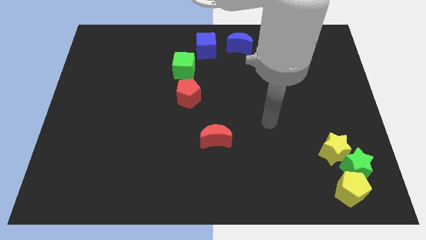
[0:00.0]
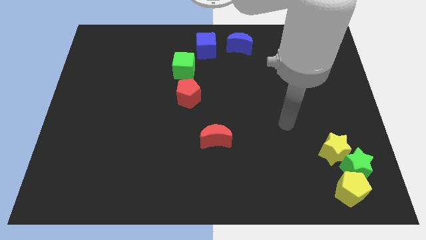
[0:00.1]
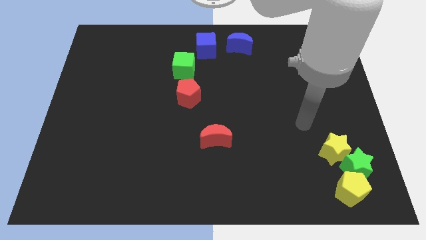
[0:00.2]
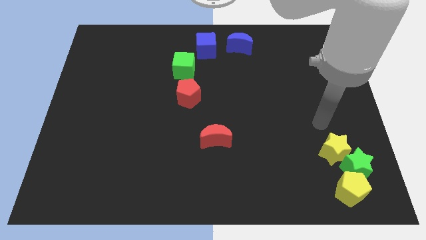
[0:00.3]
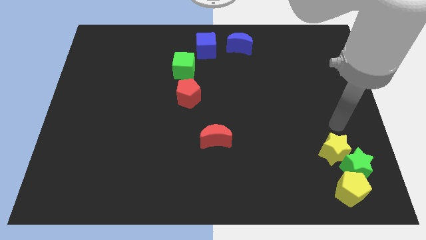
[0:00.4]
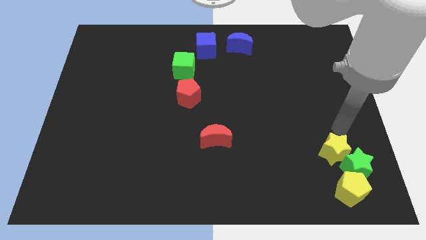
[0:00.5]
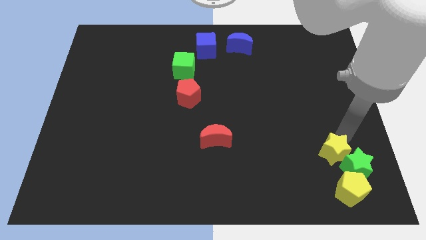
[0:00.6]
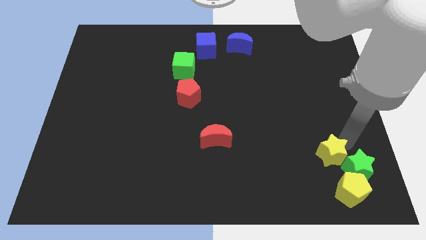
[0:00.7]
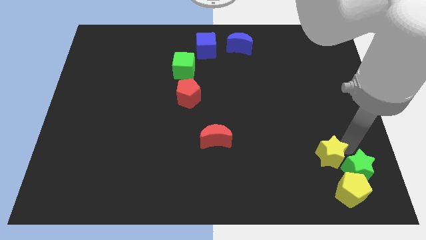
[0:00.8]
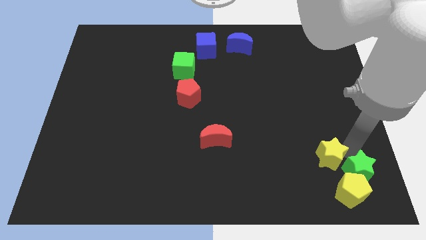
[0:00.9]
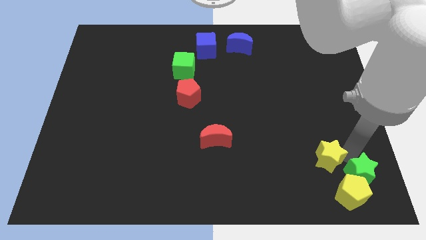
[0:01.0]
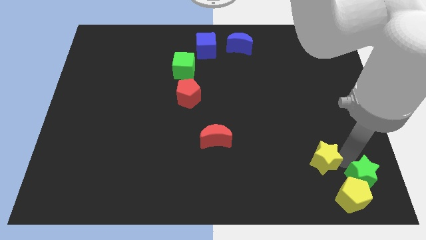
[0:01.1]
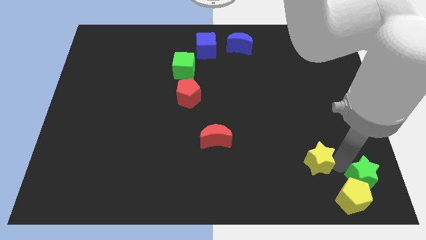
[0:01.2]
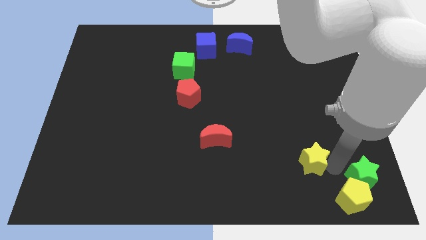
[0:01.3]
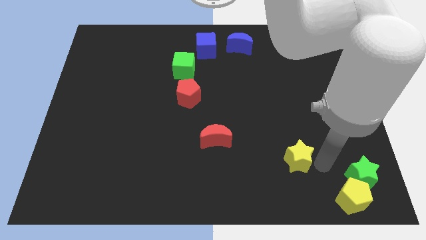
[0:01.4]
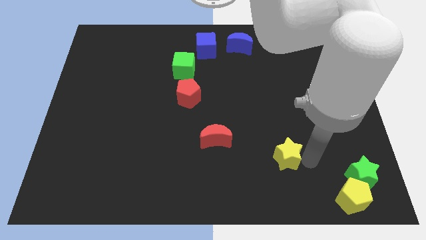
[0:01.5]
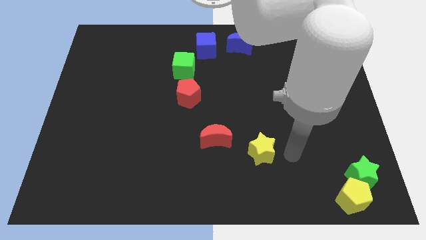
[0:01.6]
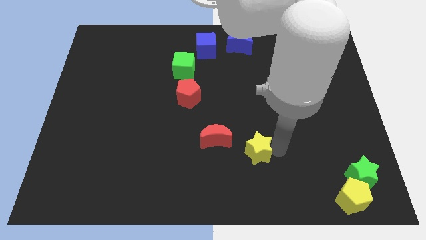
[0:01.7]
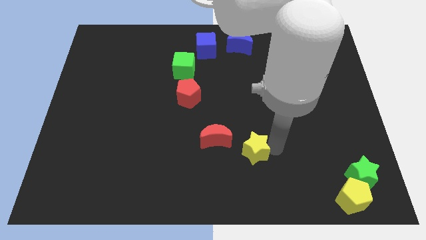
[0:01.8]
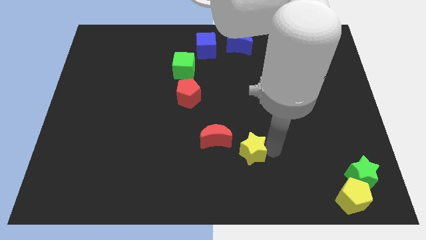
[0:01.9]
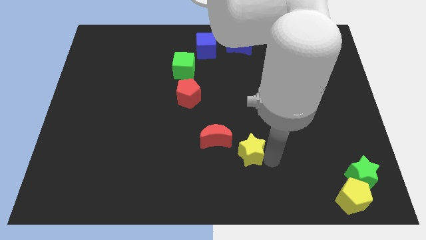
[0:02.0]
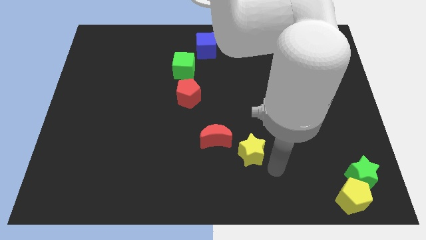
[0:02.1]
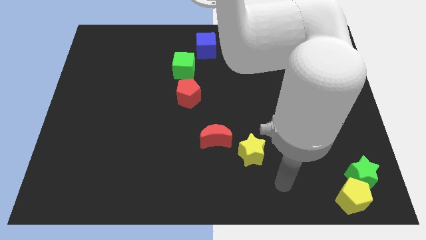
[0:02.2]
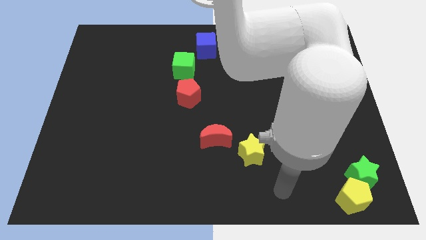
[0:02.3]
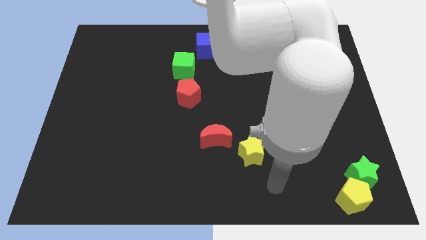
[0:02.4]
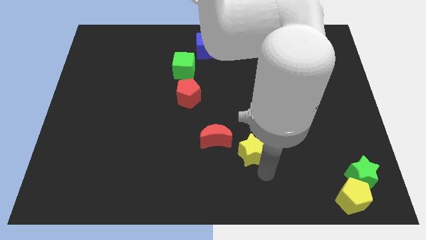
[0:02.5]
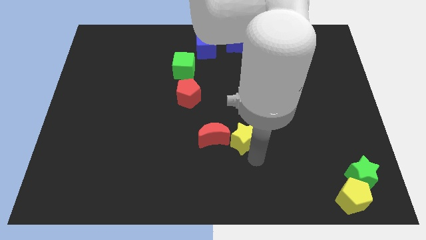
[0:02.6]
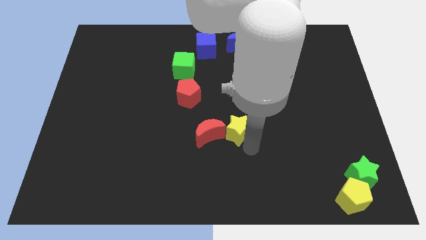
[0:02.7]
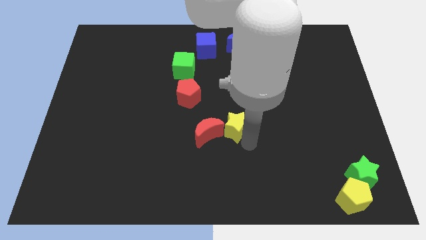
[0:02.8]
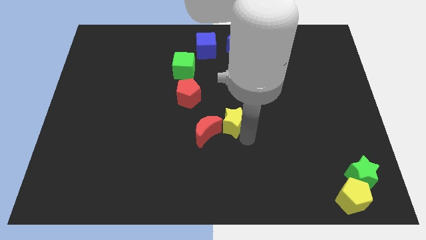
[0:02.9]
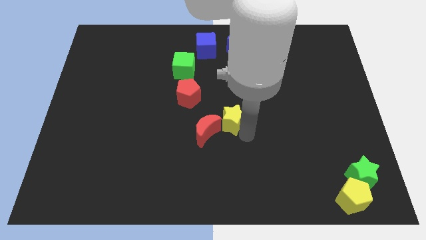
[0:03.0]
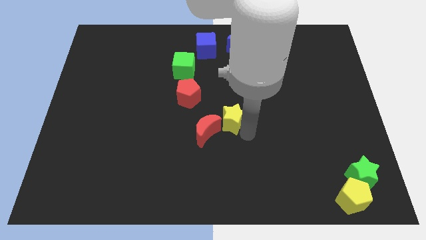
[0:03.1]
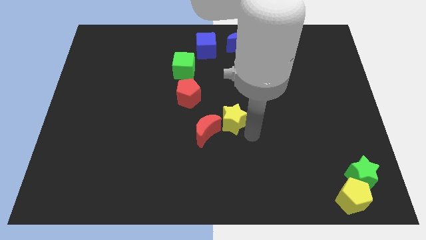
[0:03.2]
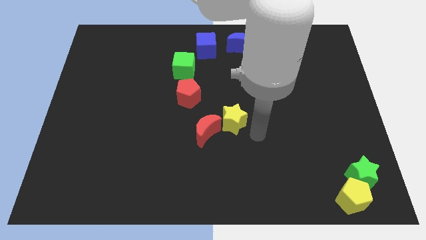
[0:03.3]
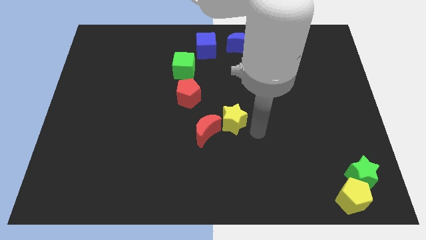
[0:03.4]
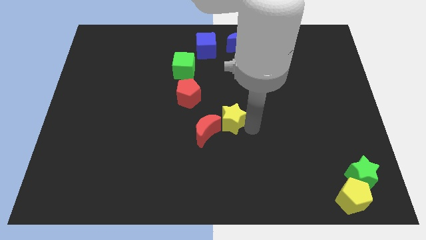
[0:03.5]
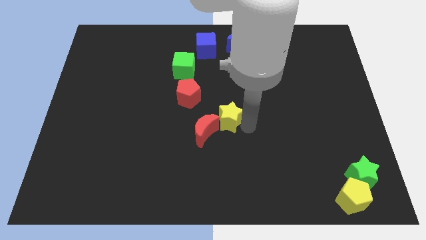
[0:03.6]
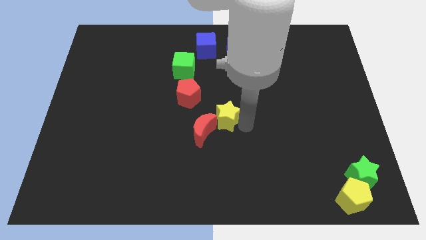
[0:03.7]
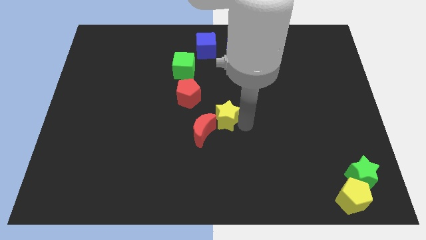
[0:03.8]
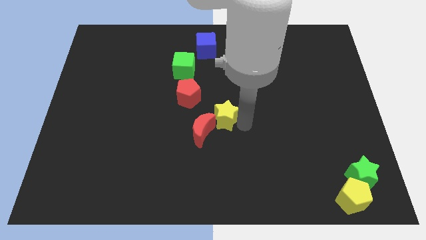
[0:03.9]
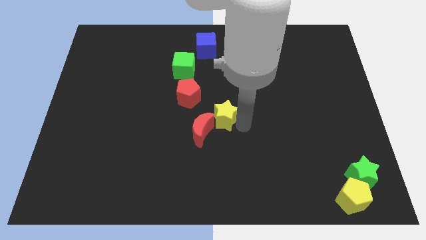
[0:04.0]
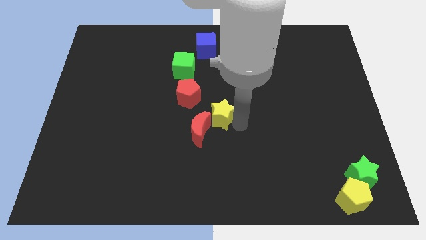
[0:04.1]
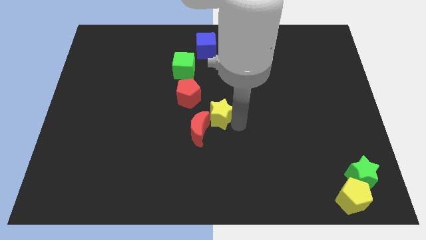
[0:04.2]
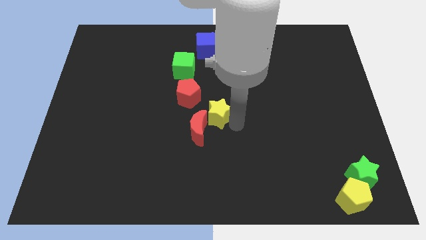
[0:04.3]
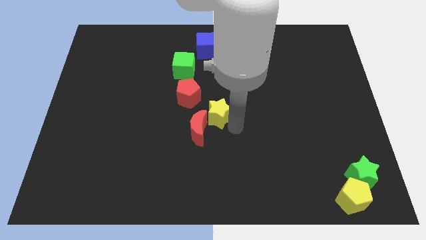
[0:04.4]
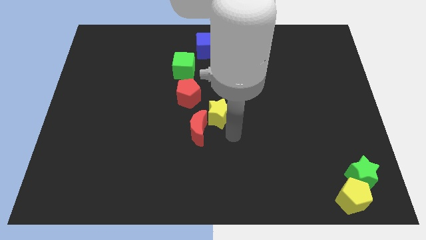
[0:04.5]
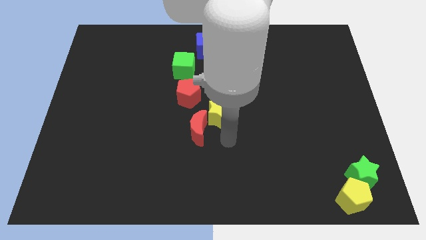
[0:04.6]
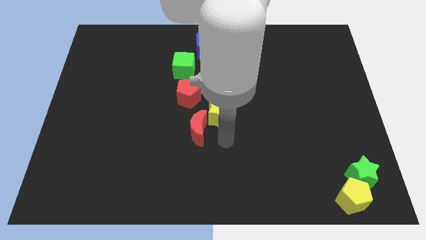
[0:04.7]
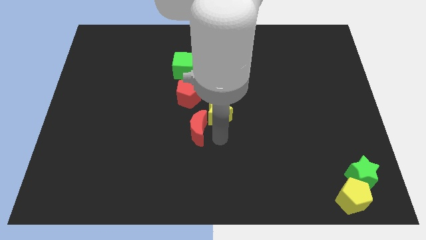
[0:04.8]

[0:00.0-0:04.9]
push the yellow star right to red moon

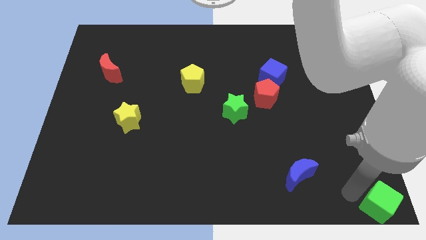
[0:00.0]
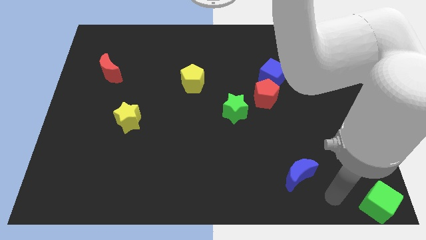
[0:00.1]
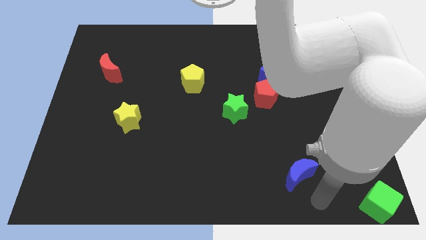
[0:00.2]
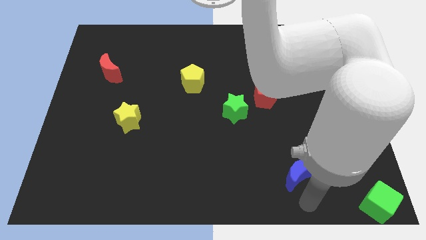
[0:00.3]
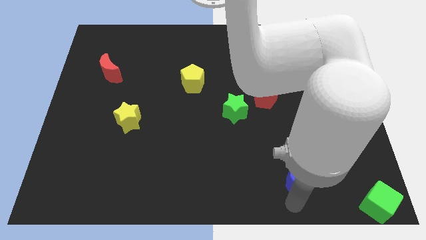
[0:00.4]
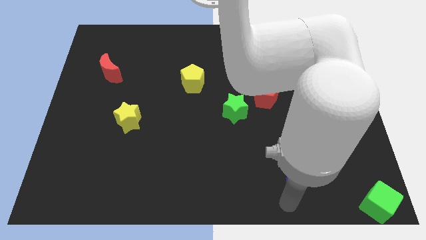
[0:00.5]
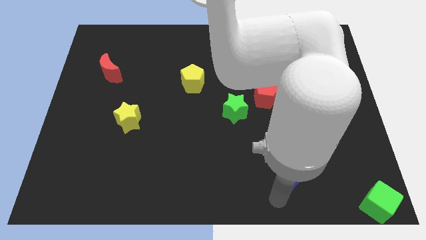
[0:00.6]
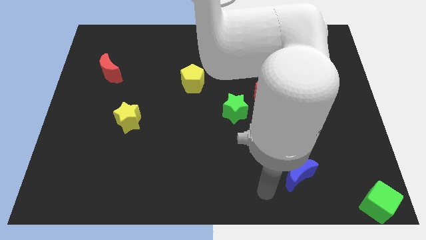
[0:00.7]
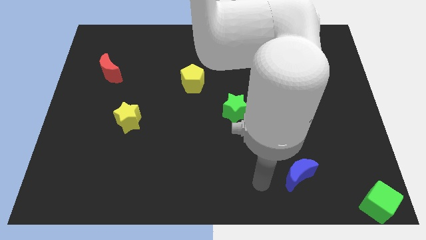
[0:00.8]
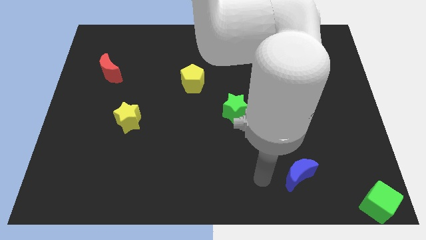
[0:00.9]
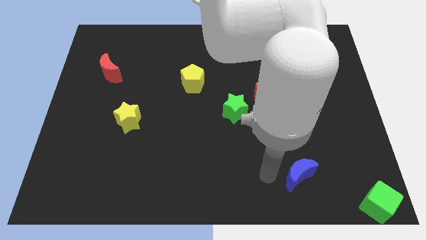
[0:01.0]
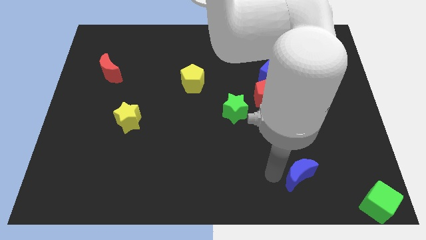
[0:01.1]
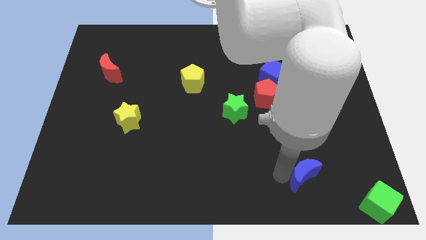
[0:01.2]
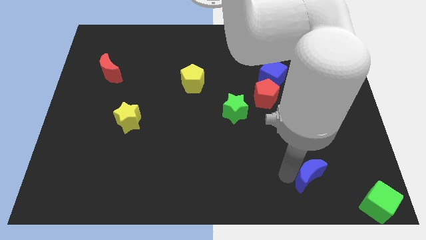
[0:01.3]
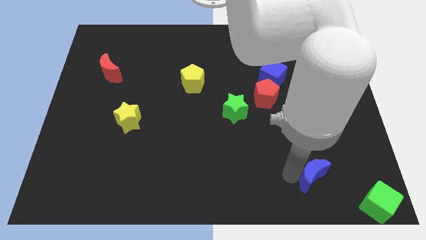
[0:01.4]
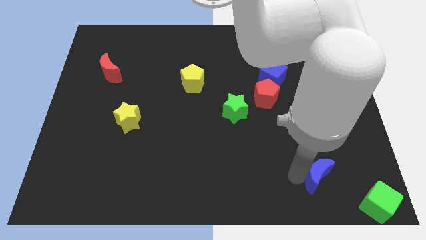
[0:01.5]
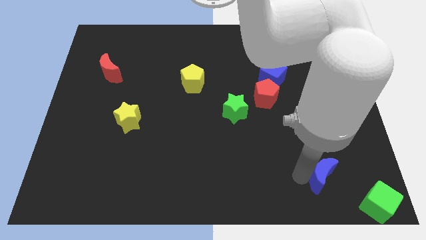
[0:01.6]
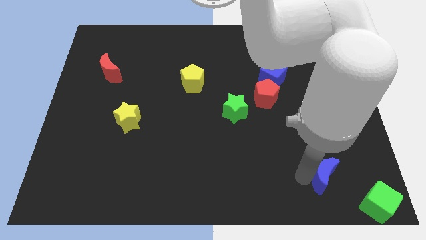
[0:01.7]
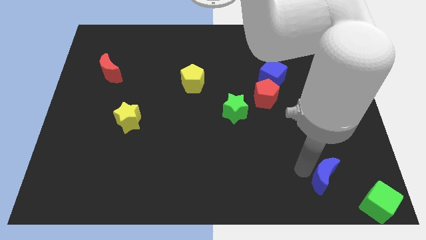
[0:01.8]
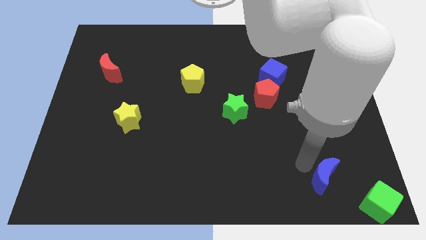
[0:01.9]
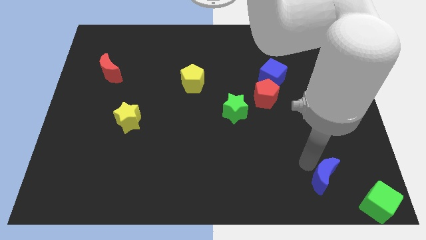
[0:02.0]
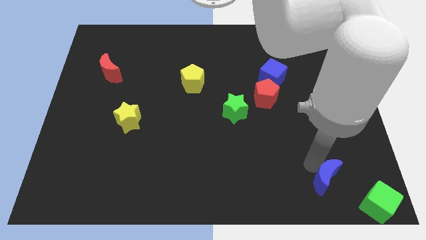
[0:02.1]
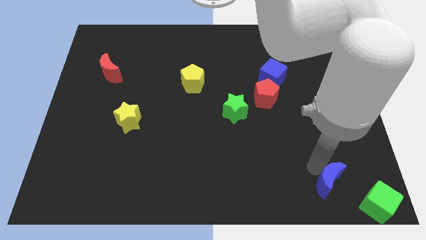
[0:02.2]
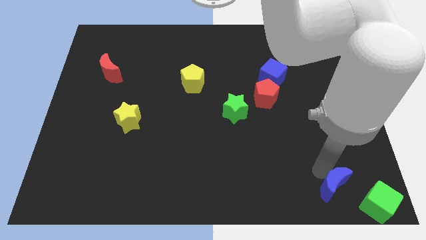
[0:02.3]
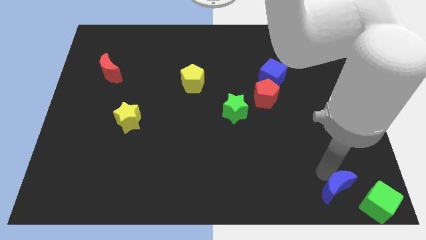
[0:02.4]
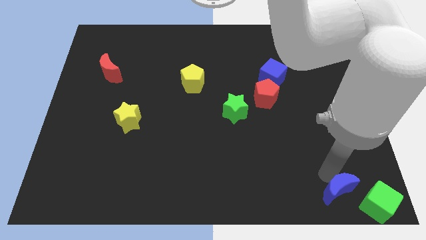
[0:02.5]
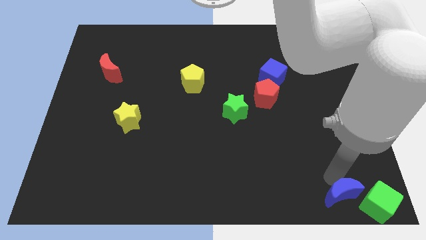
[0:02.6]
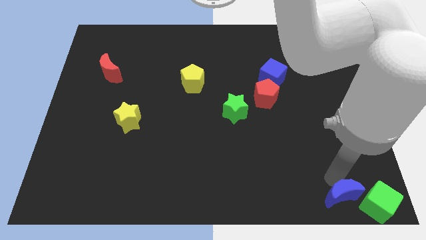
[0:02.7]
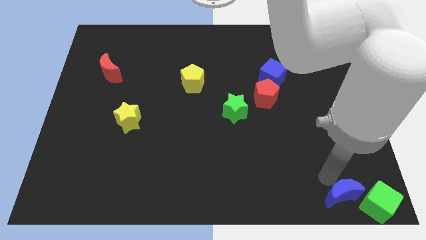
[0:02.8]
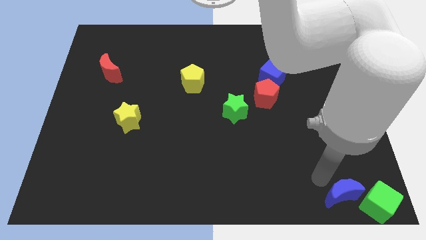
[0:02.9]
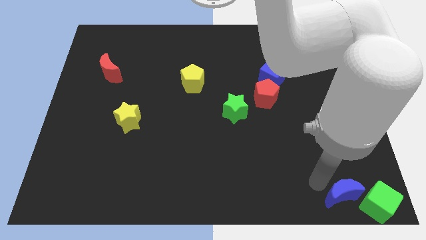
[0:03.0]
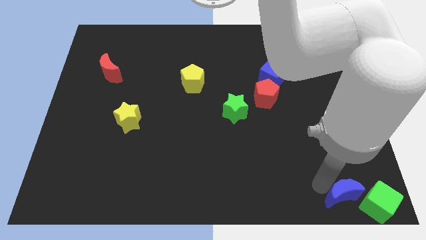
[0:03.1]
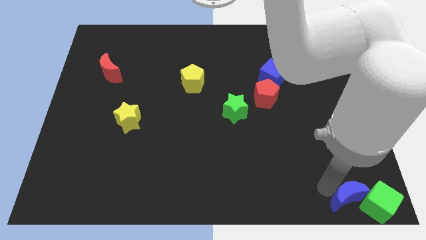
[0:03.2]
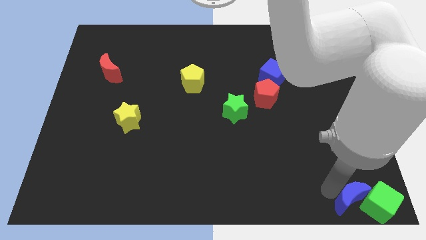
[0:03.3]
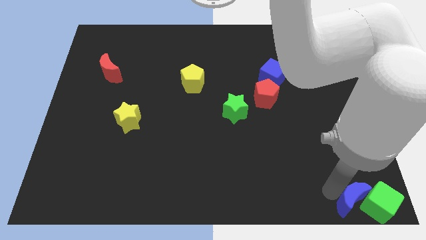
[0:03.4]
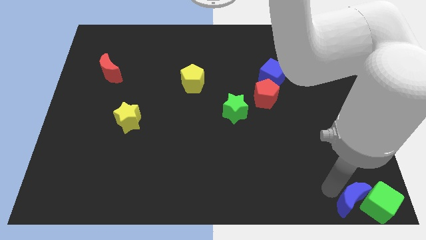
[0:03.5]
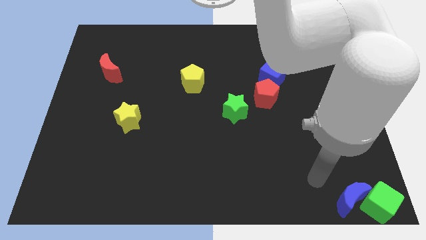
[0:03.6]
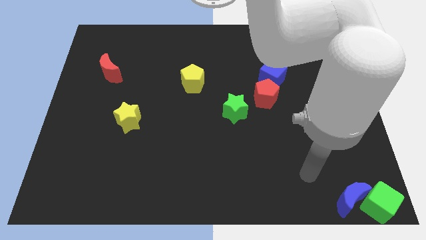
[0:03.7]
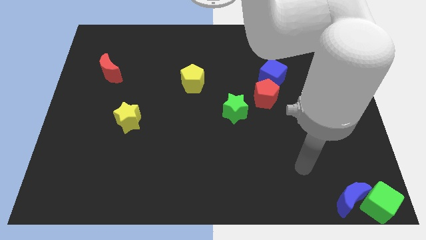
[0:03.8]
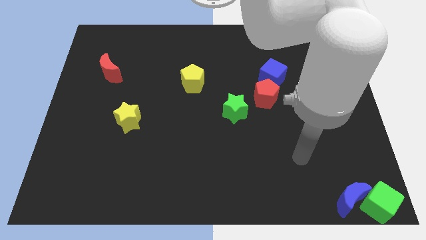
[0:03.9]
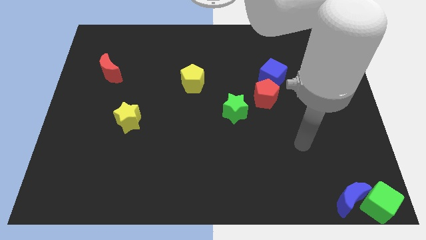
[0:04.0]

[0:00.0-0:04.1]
put the blue crescent to the left side of green cube

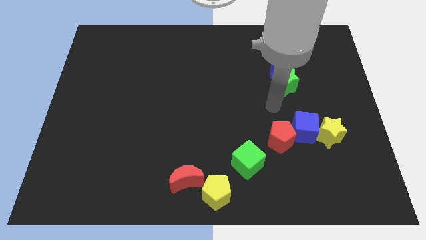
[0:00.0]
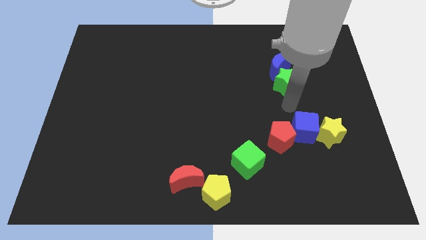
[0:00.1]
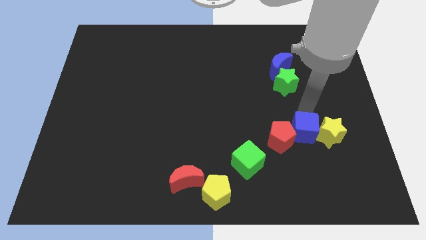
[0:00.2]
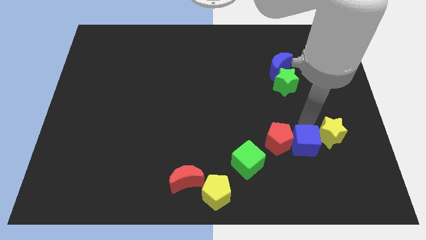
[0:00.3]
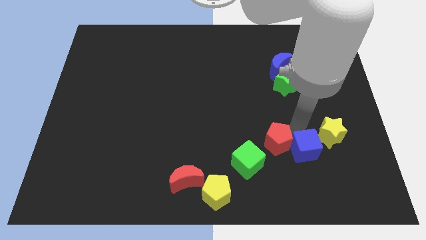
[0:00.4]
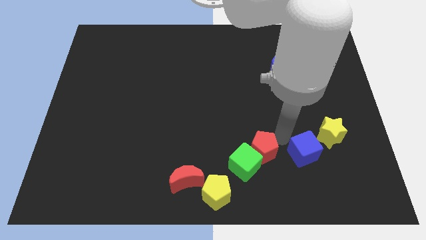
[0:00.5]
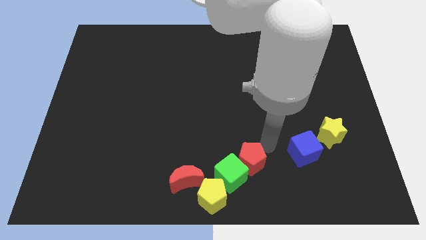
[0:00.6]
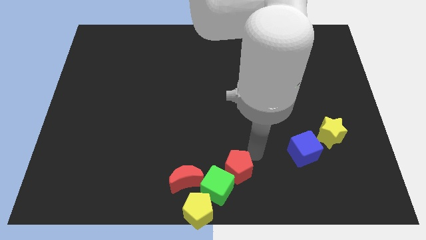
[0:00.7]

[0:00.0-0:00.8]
separate red pentagon and blue cube
